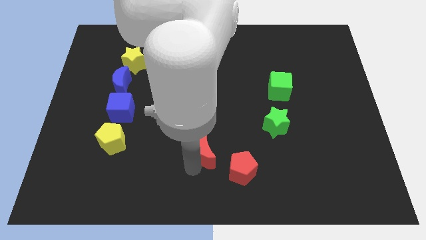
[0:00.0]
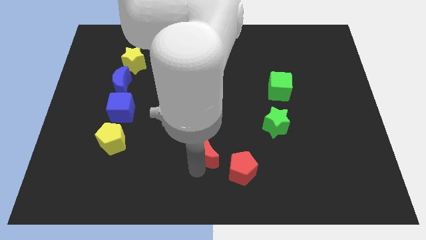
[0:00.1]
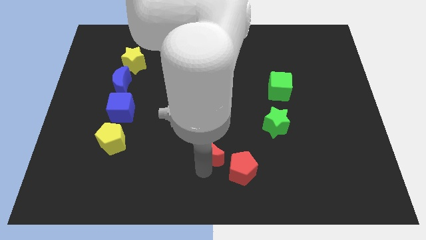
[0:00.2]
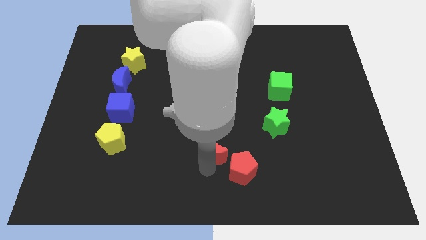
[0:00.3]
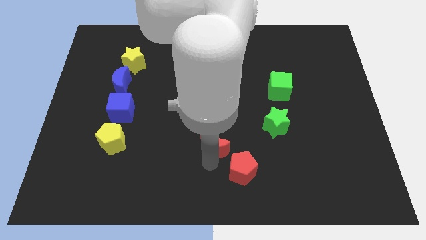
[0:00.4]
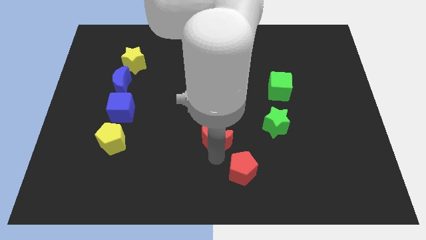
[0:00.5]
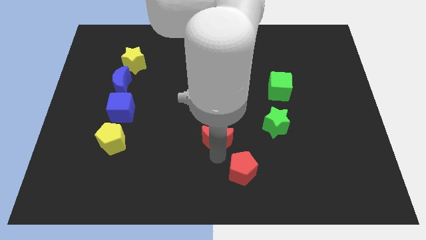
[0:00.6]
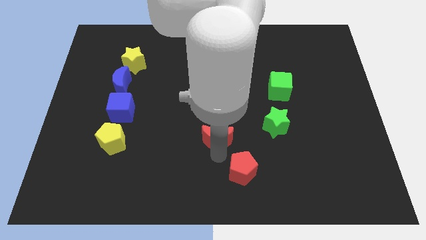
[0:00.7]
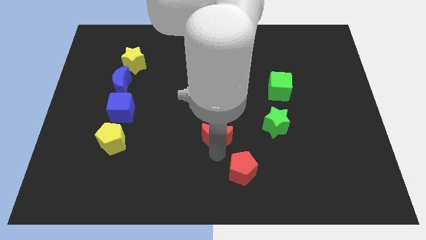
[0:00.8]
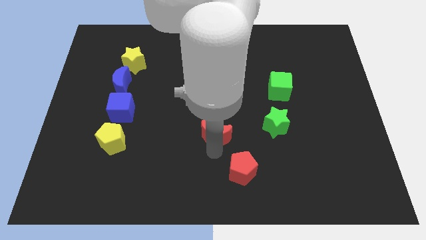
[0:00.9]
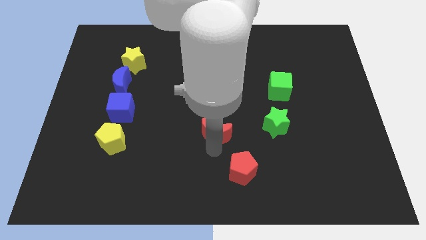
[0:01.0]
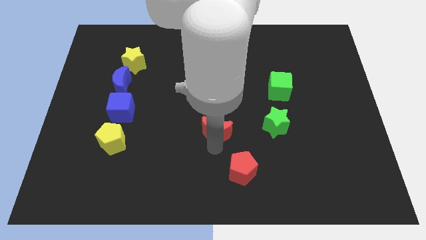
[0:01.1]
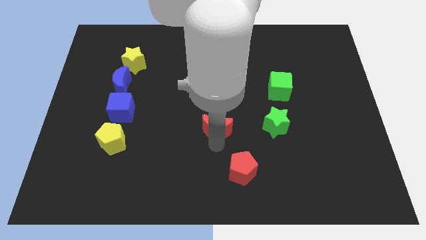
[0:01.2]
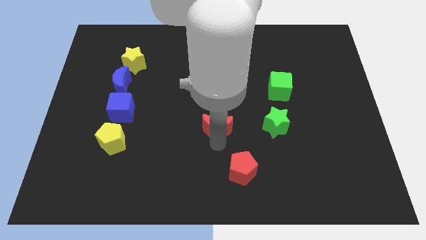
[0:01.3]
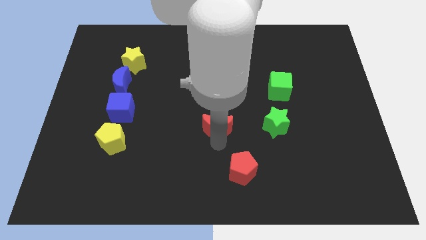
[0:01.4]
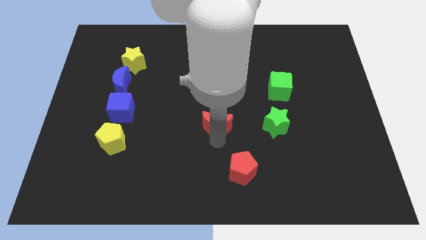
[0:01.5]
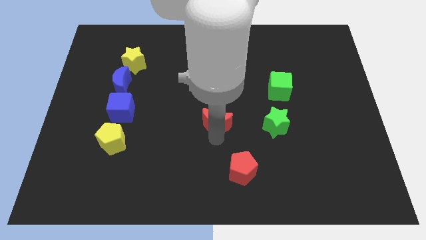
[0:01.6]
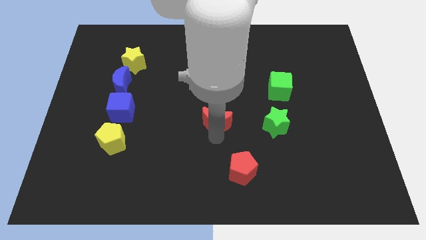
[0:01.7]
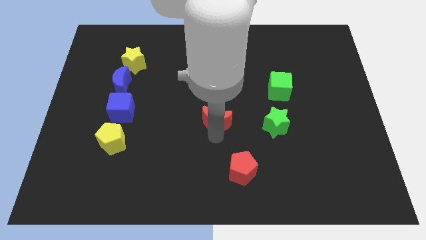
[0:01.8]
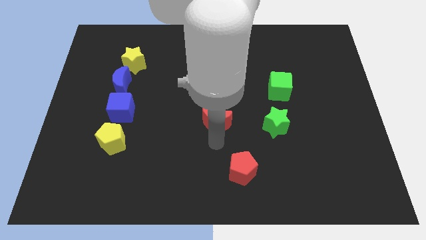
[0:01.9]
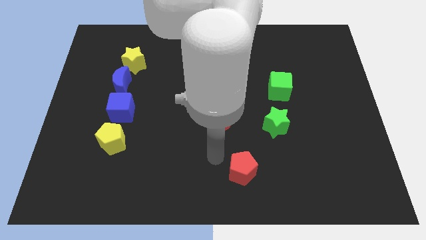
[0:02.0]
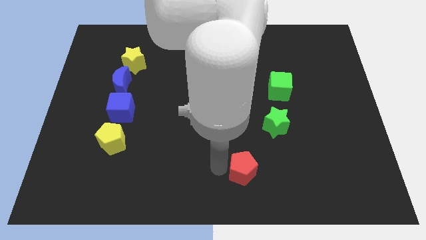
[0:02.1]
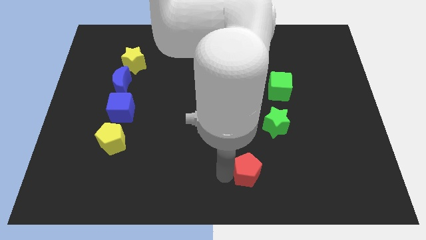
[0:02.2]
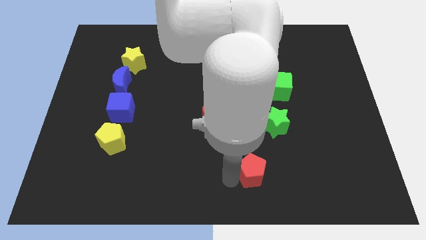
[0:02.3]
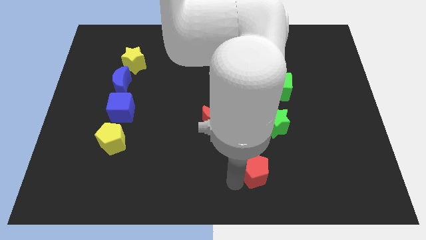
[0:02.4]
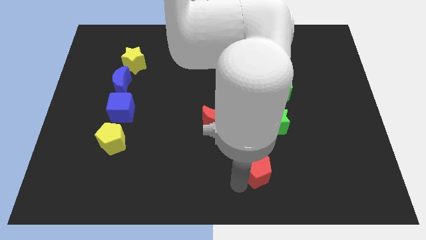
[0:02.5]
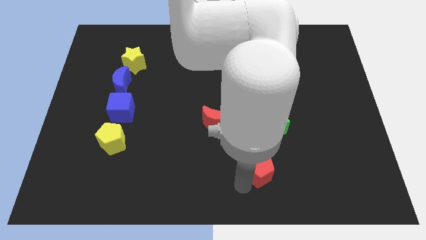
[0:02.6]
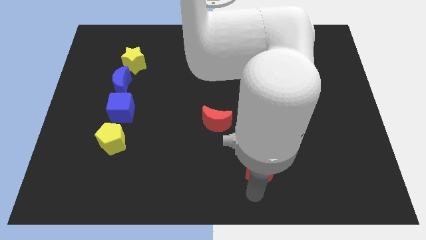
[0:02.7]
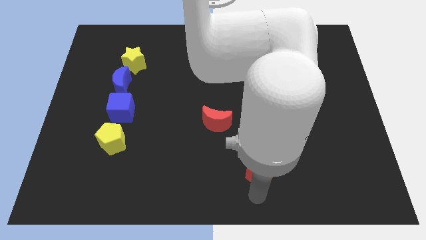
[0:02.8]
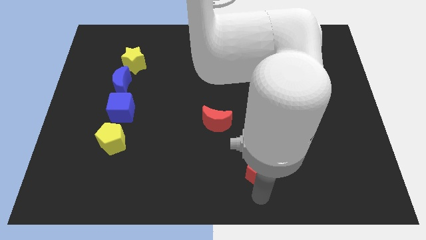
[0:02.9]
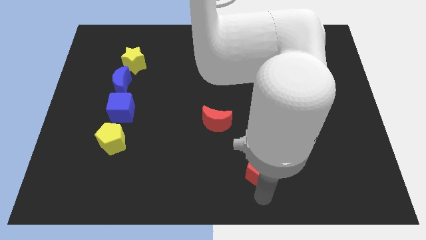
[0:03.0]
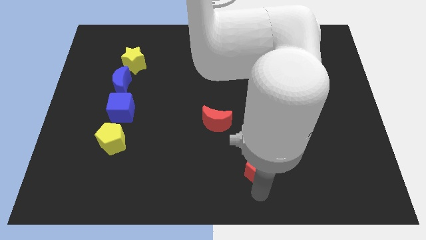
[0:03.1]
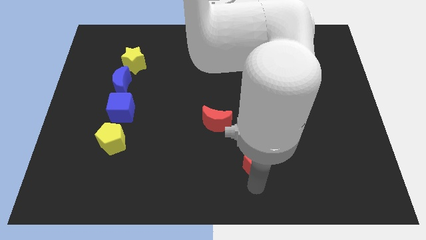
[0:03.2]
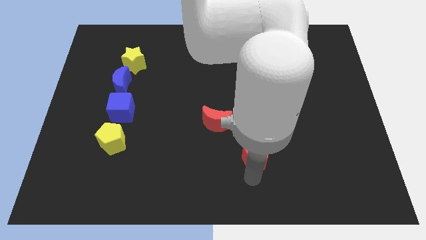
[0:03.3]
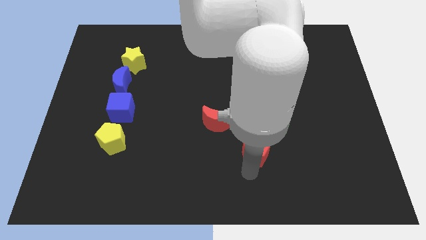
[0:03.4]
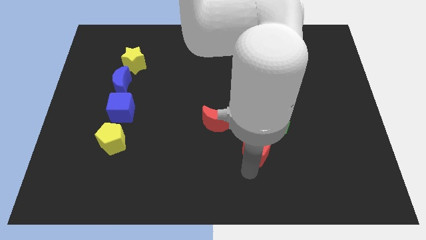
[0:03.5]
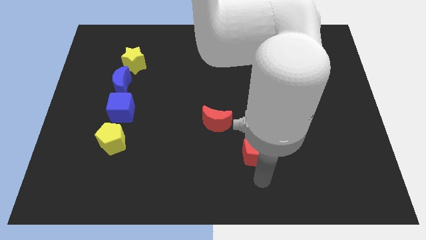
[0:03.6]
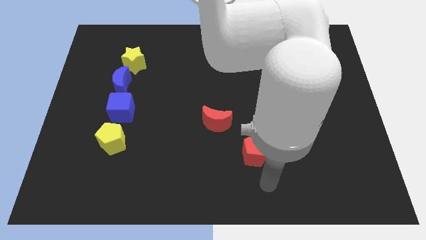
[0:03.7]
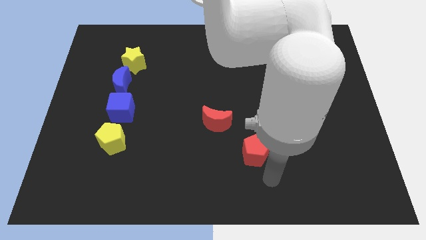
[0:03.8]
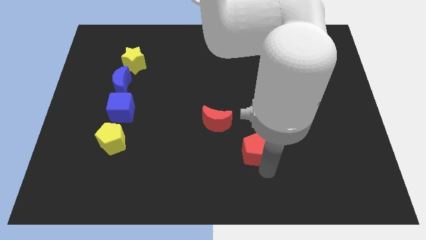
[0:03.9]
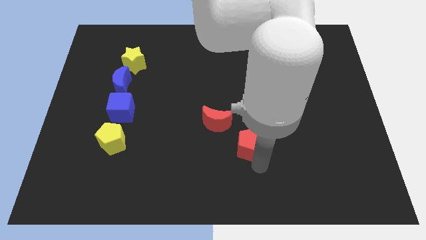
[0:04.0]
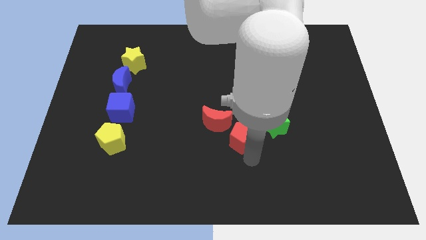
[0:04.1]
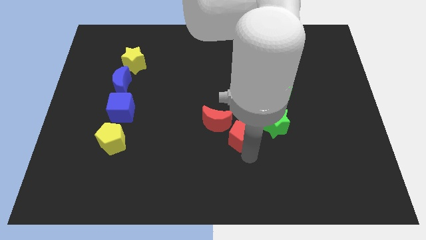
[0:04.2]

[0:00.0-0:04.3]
push red blocks up

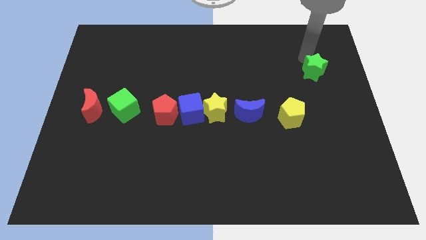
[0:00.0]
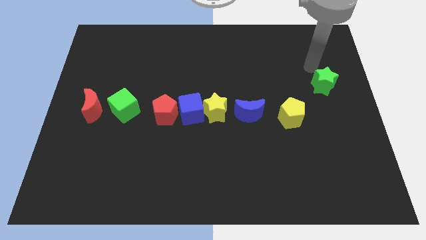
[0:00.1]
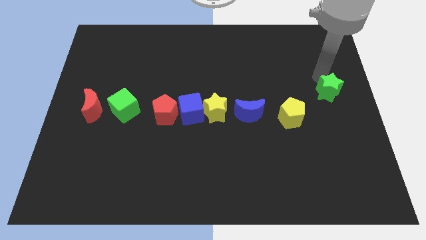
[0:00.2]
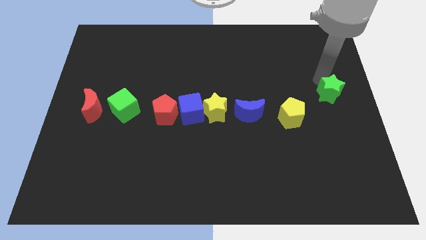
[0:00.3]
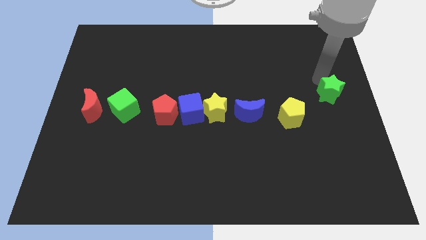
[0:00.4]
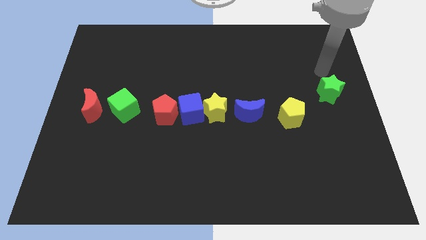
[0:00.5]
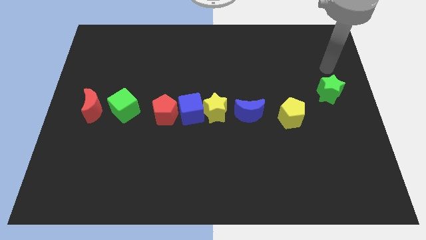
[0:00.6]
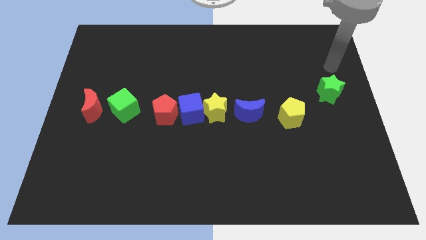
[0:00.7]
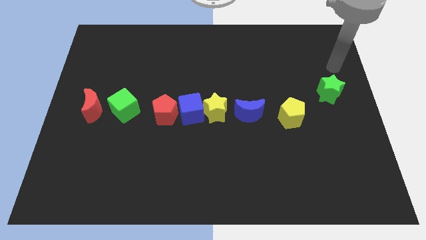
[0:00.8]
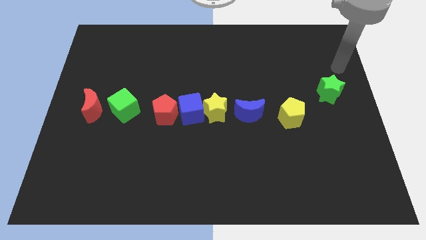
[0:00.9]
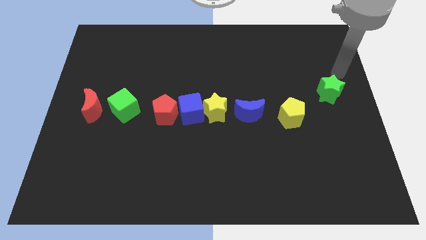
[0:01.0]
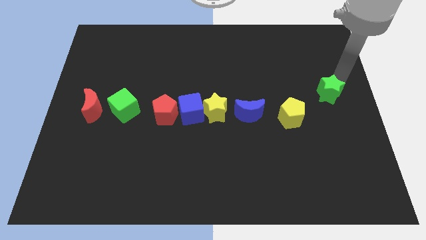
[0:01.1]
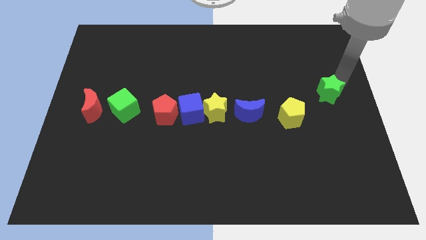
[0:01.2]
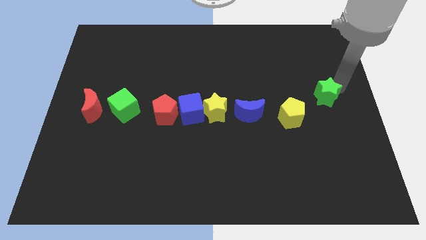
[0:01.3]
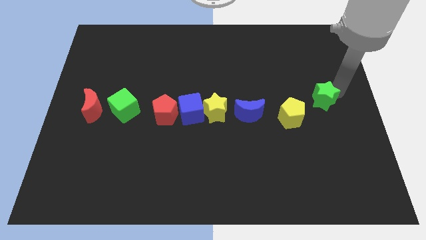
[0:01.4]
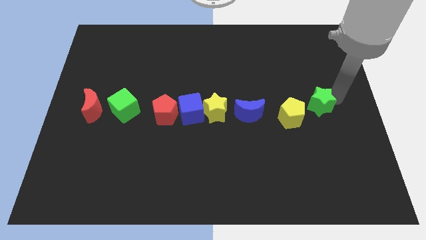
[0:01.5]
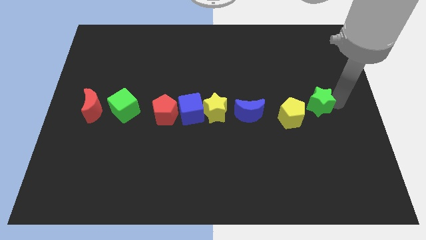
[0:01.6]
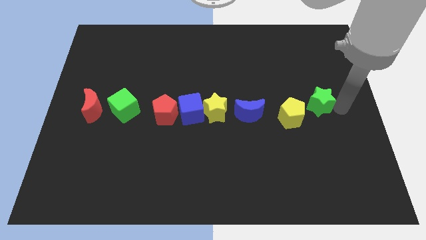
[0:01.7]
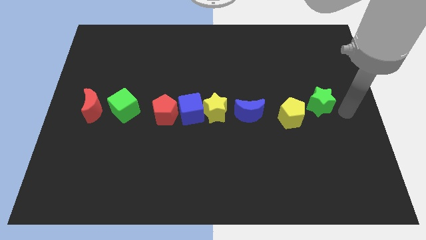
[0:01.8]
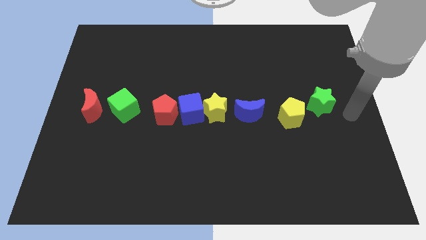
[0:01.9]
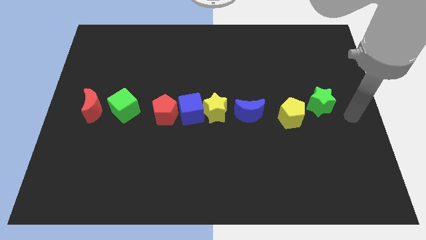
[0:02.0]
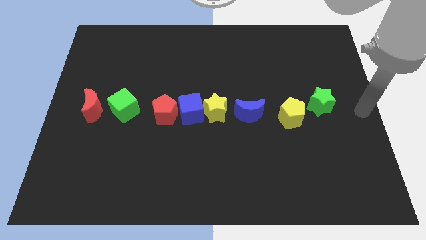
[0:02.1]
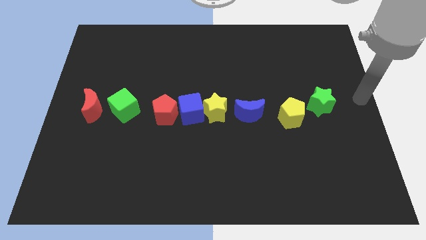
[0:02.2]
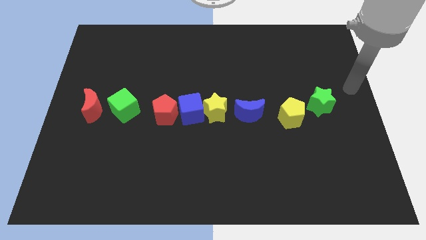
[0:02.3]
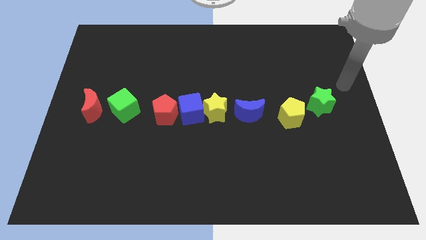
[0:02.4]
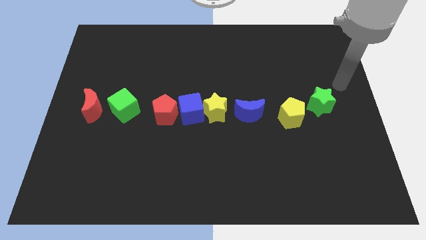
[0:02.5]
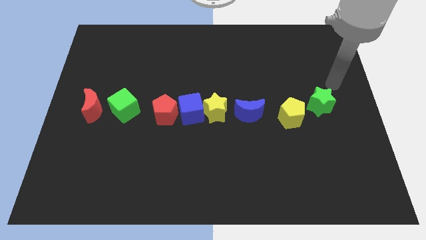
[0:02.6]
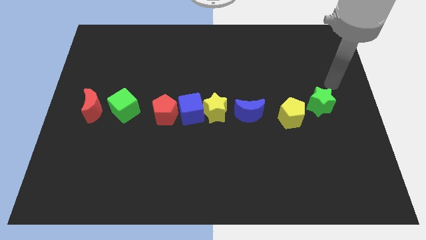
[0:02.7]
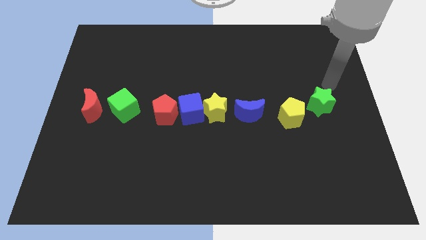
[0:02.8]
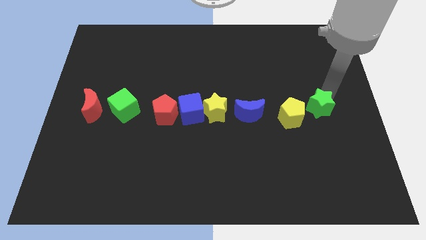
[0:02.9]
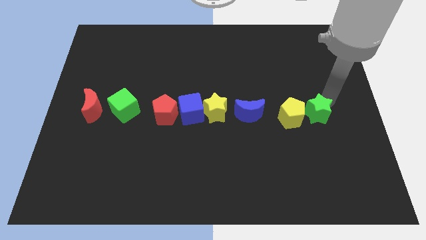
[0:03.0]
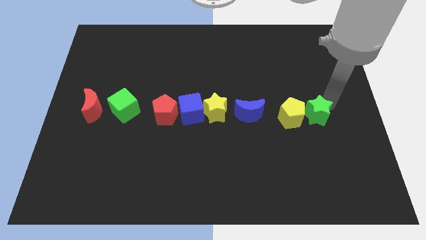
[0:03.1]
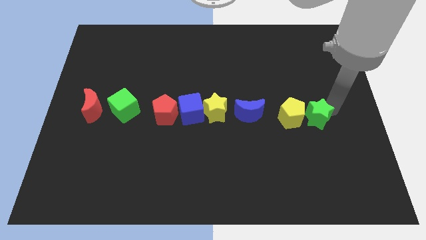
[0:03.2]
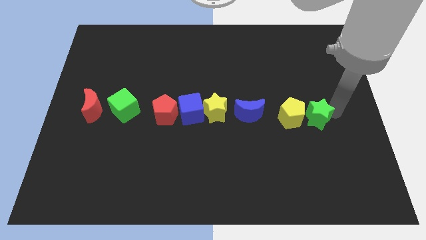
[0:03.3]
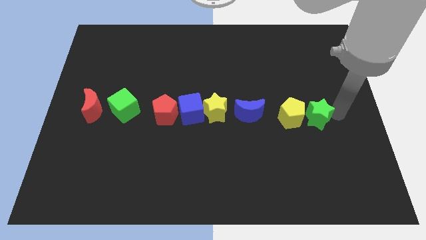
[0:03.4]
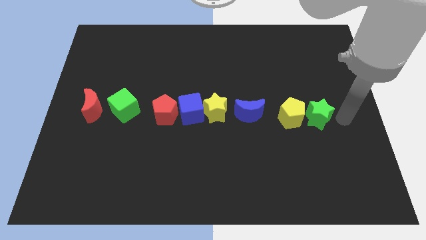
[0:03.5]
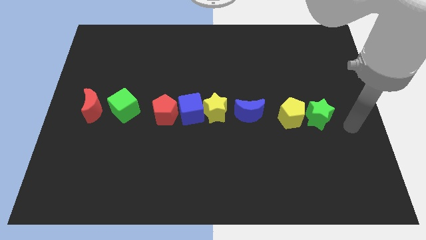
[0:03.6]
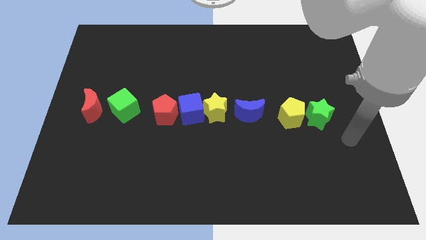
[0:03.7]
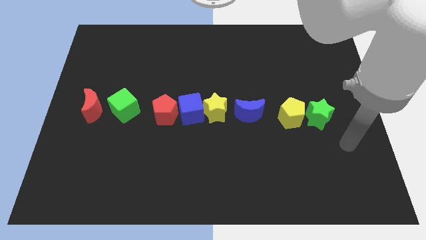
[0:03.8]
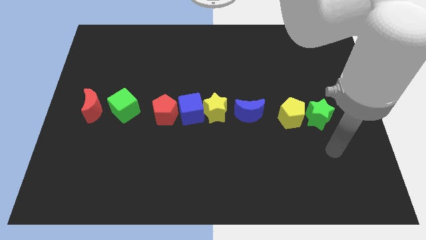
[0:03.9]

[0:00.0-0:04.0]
place the green star to the right of the yellow pentagon

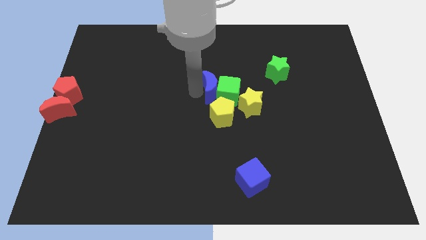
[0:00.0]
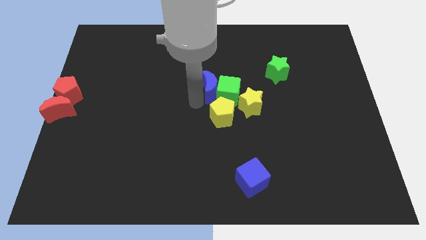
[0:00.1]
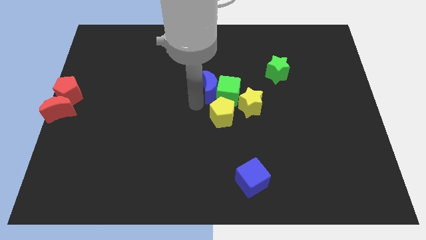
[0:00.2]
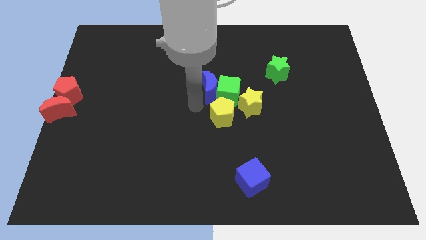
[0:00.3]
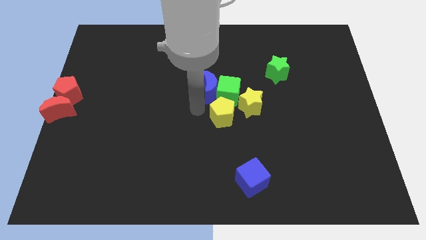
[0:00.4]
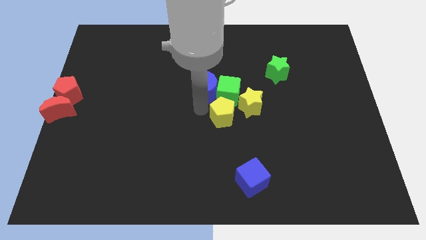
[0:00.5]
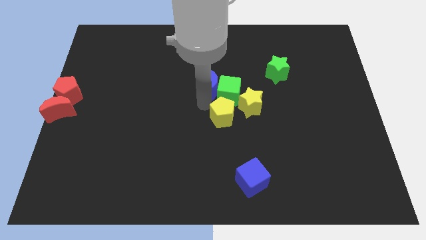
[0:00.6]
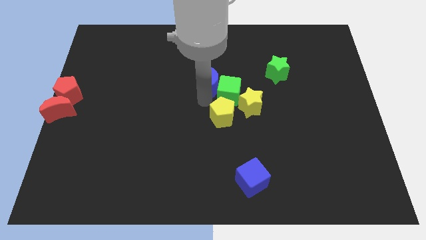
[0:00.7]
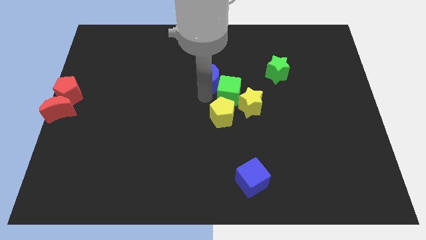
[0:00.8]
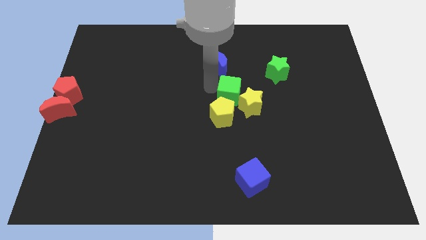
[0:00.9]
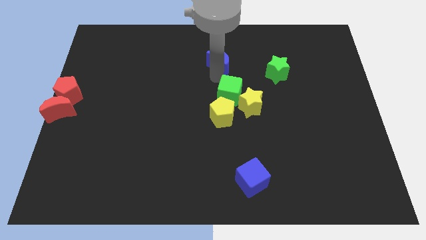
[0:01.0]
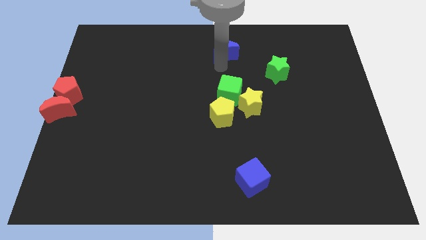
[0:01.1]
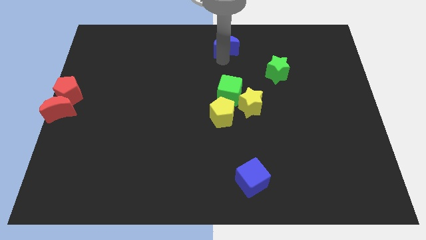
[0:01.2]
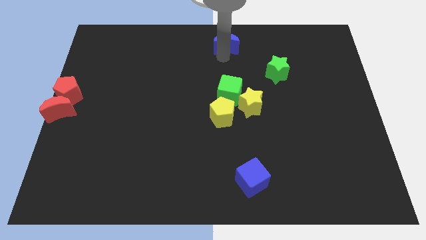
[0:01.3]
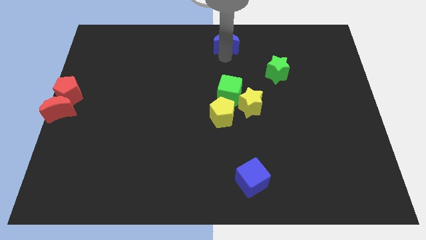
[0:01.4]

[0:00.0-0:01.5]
push blue crescent above green cube
